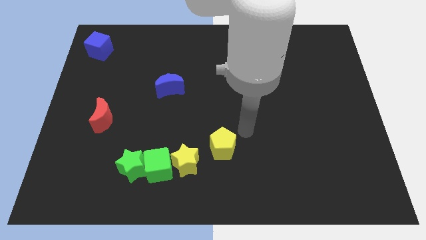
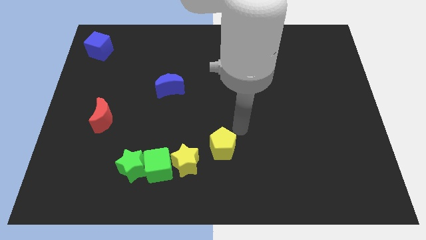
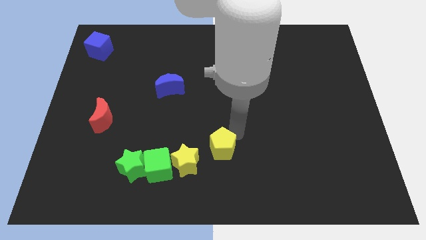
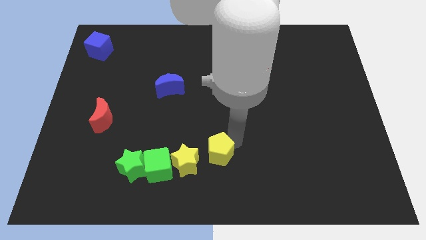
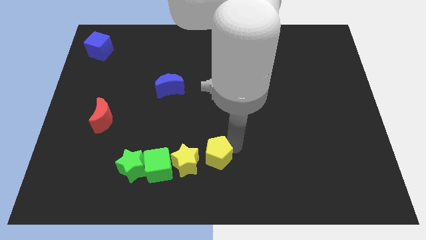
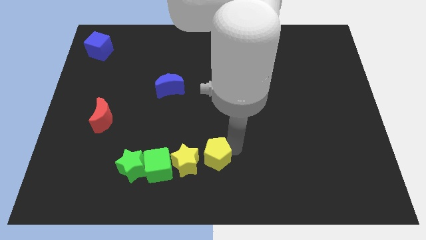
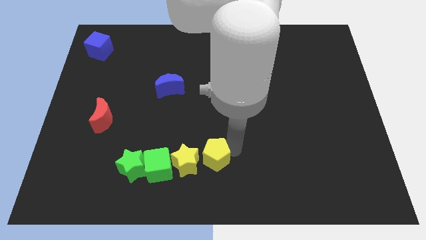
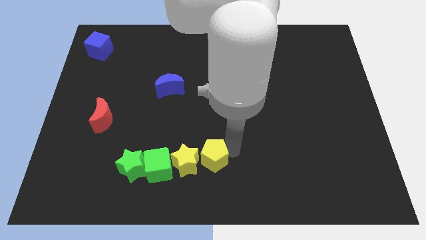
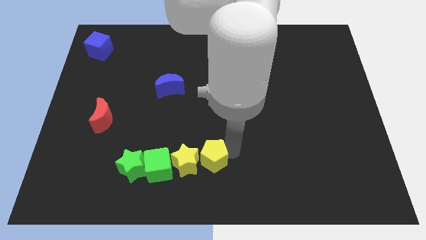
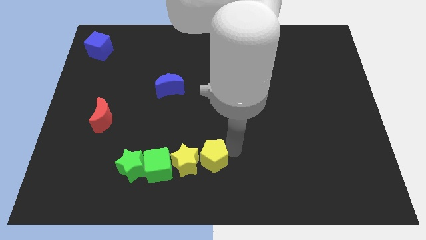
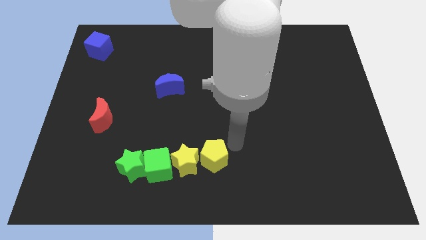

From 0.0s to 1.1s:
place pentagon to the top right of yellow star

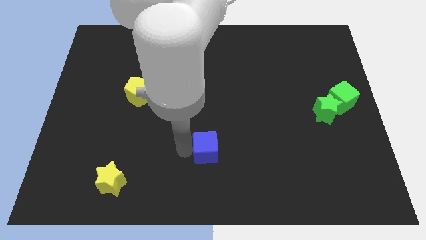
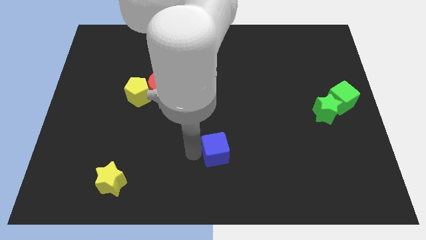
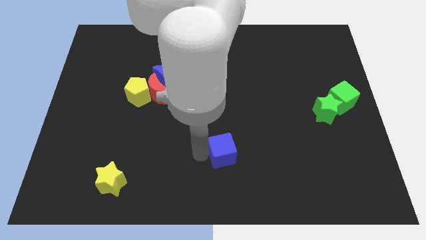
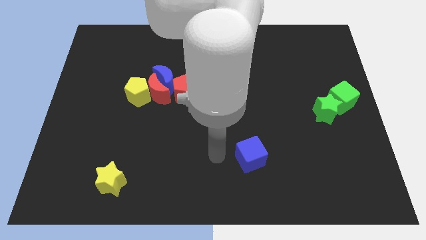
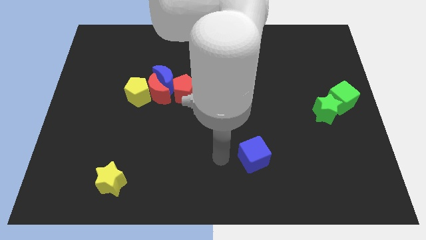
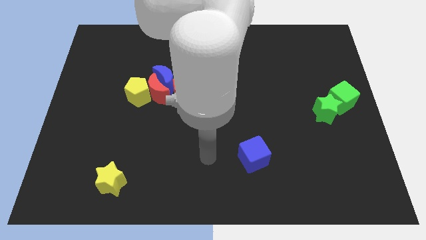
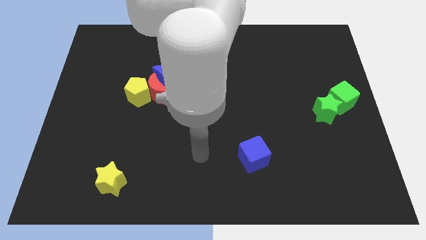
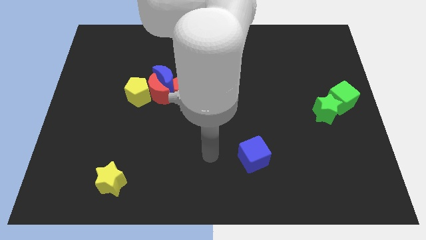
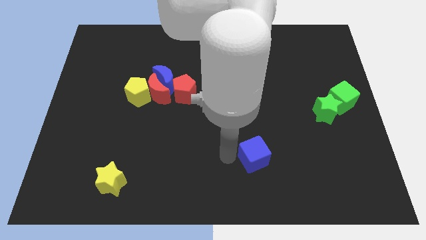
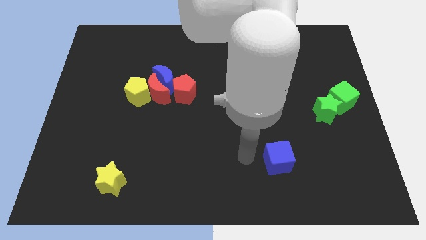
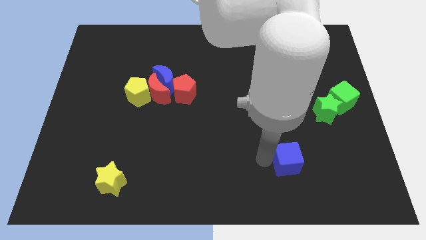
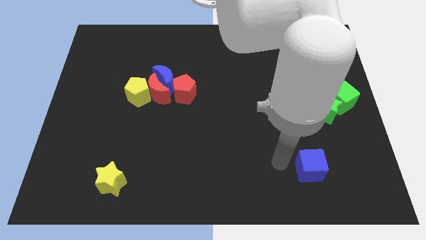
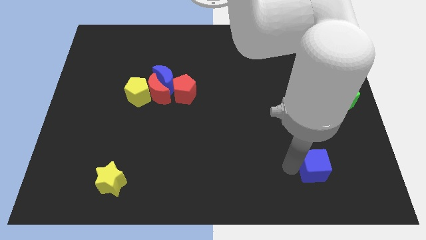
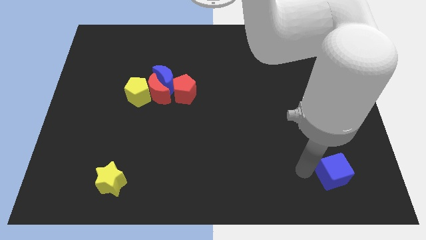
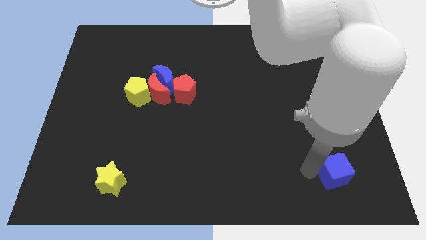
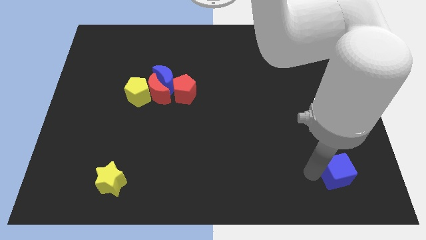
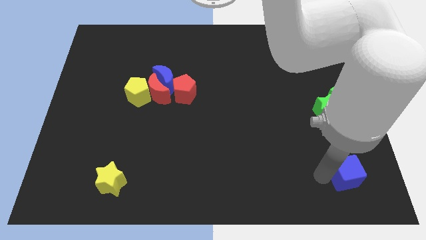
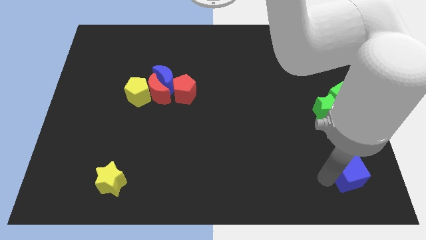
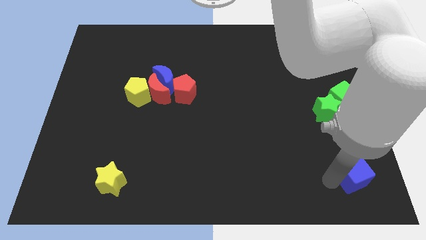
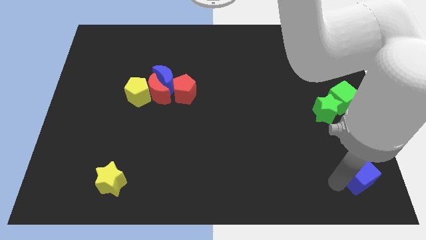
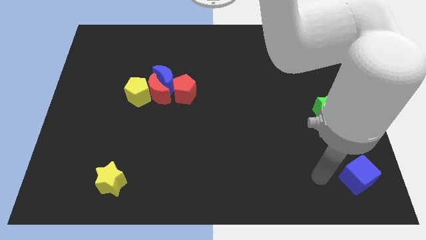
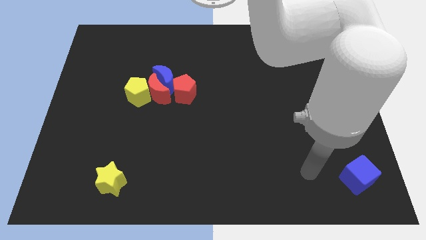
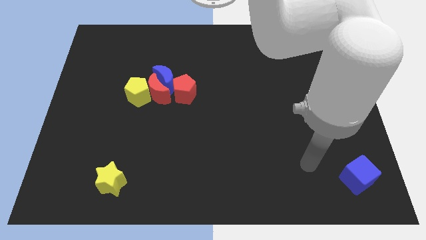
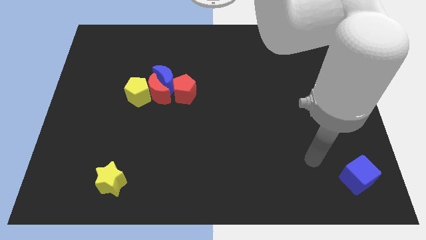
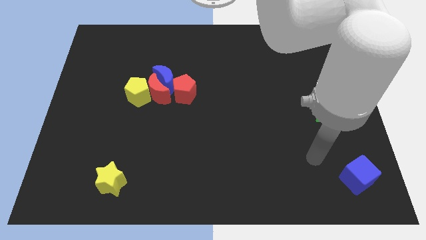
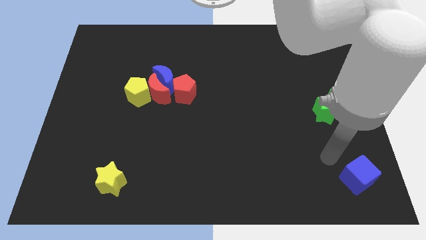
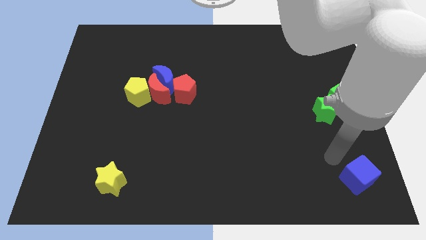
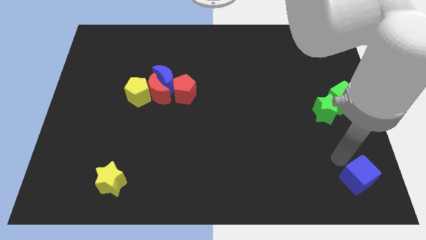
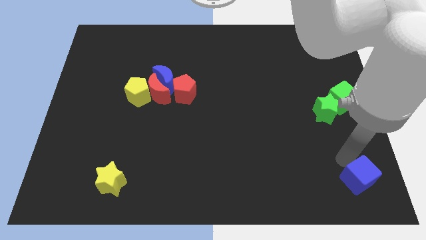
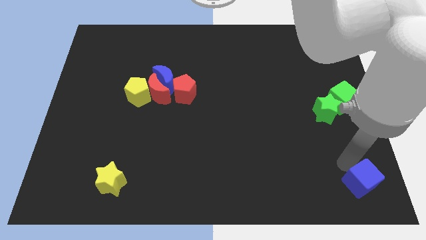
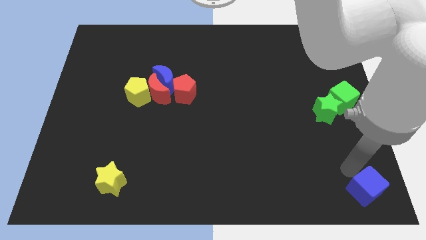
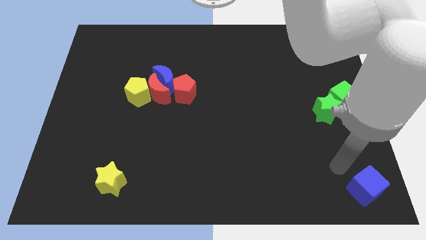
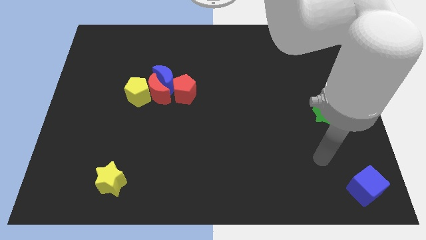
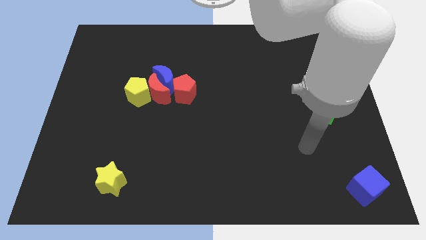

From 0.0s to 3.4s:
place the blue cube towards the right bottom corner of the board

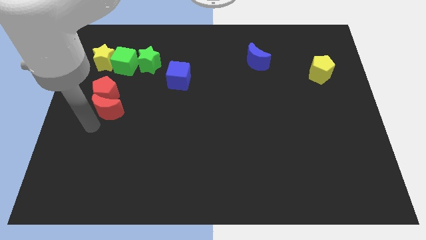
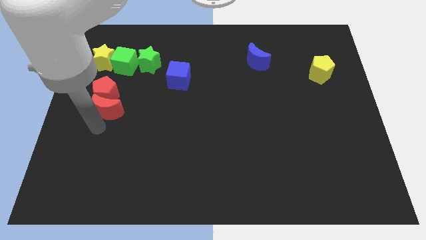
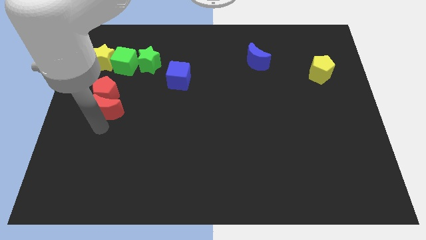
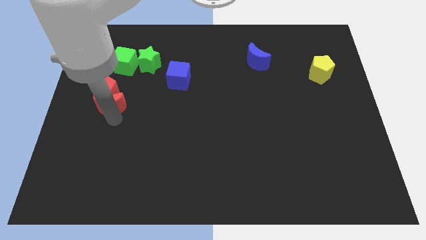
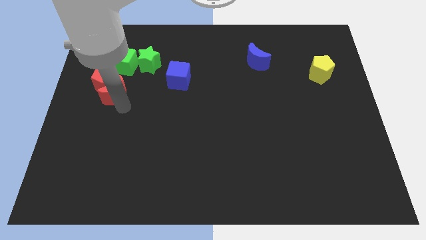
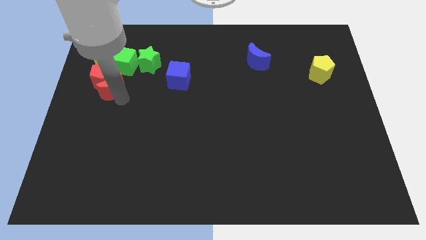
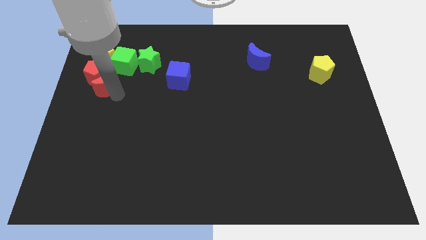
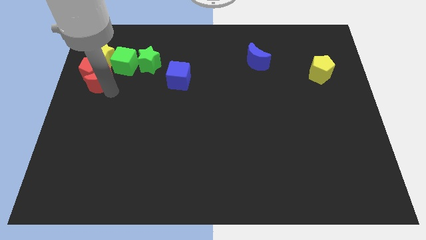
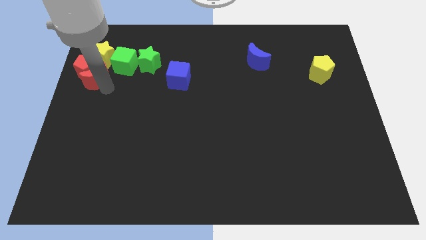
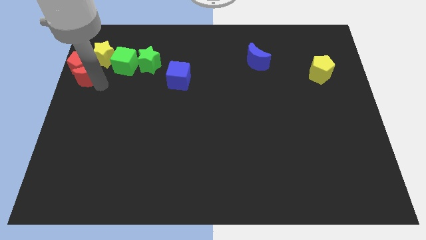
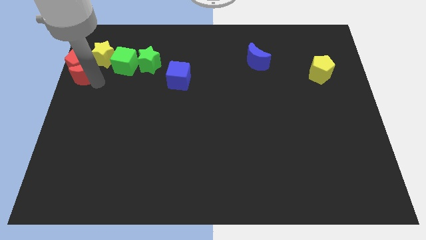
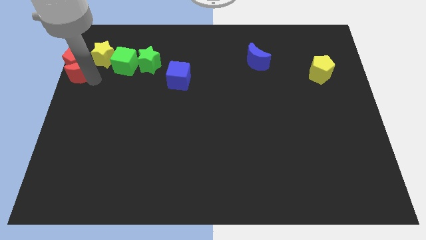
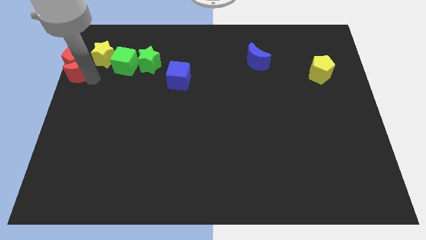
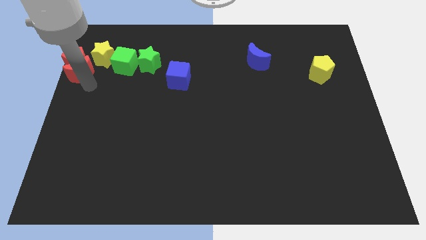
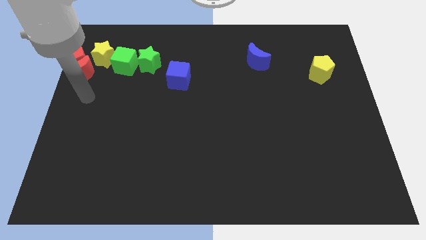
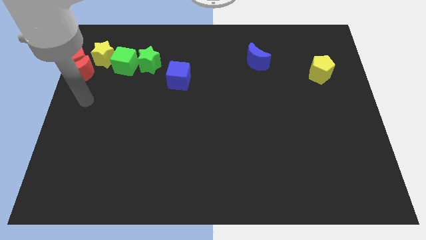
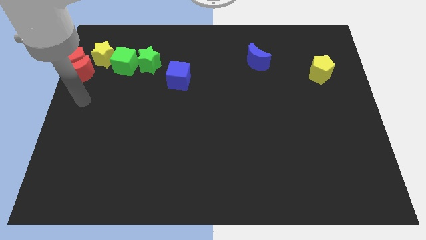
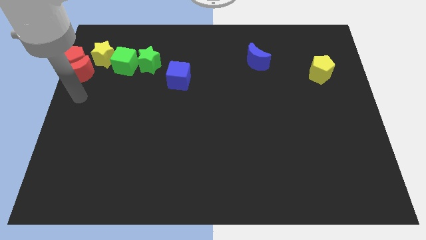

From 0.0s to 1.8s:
push the red pentagon with red moon to the left of the yellow star

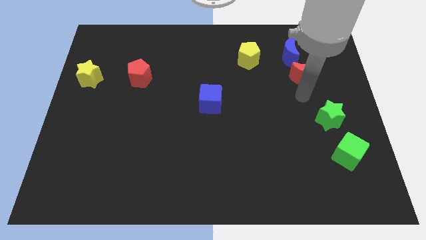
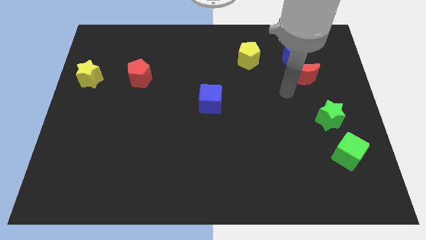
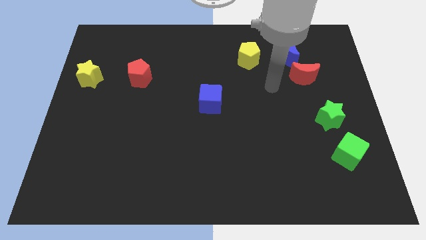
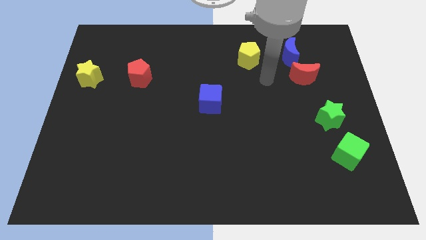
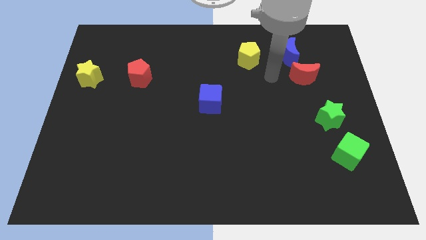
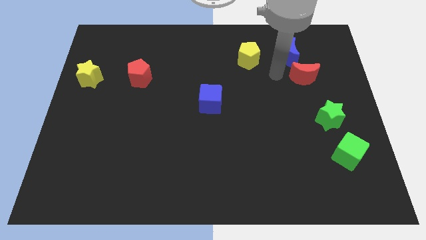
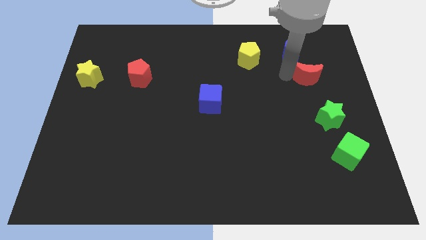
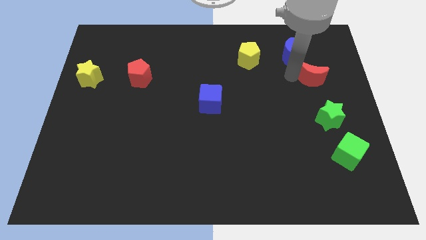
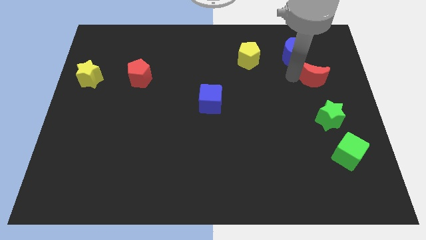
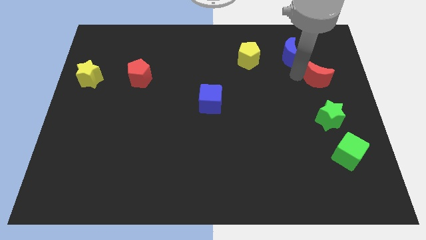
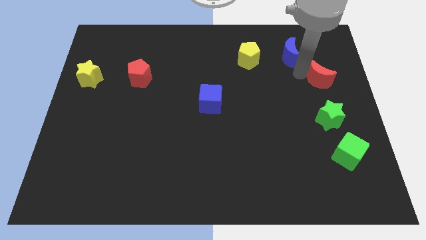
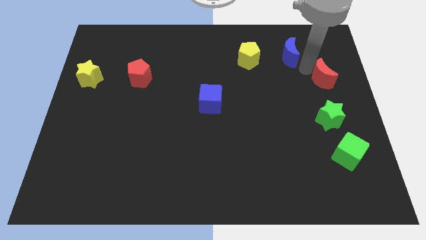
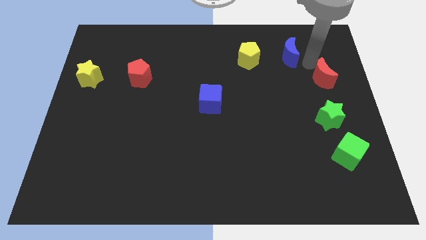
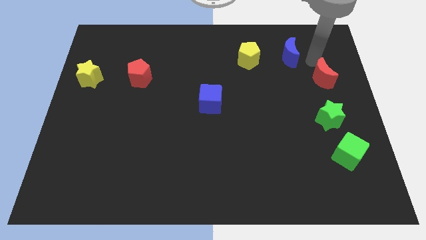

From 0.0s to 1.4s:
push the red crescent above the green star

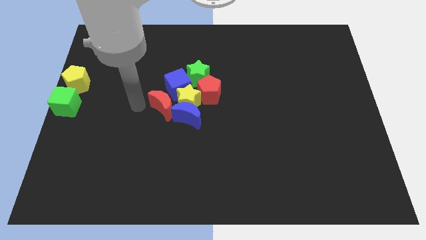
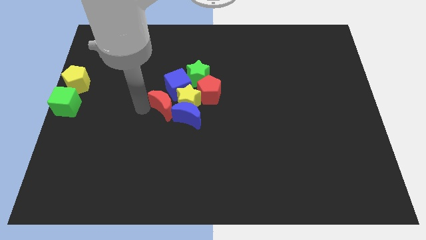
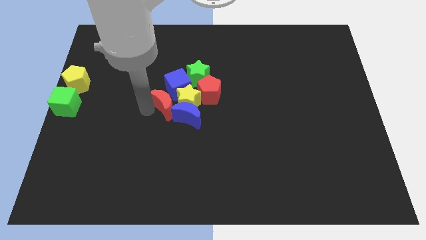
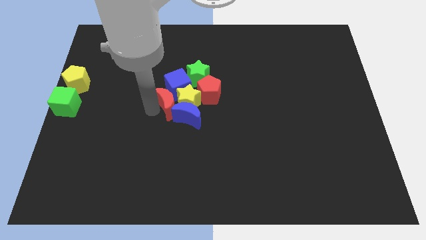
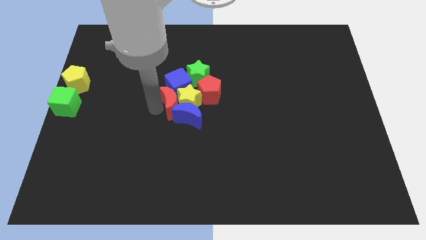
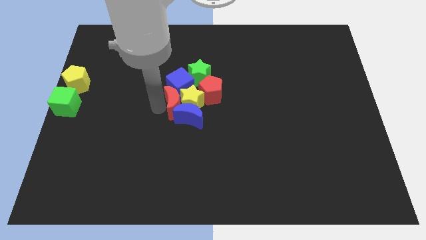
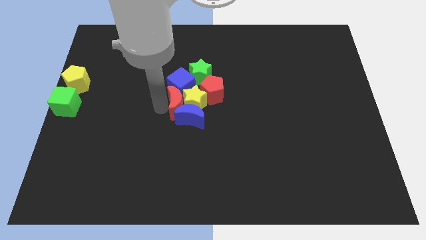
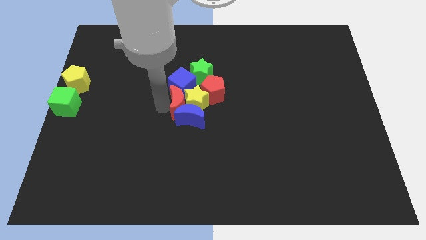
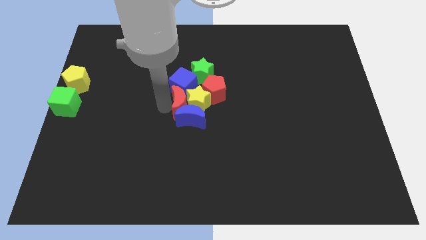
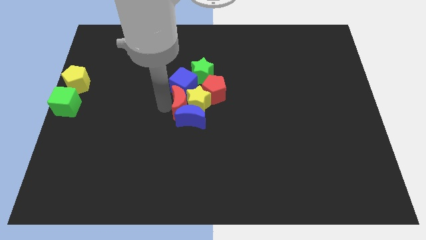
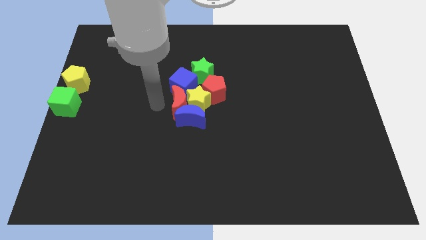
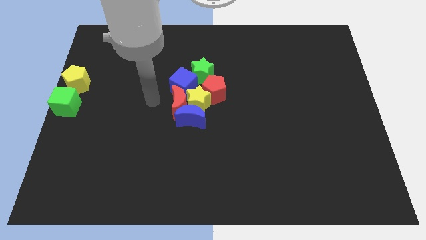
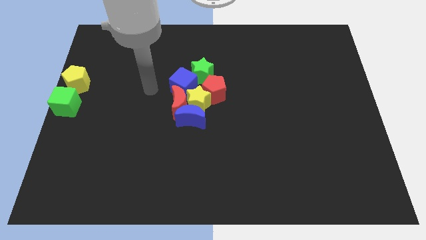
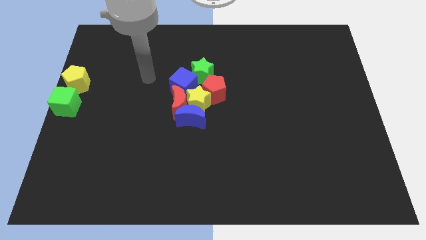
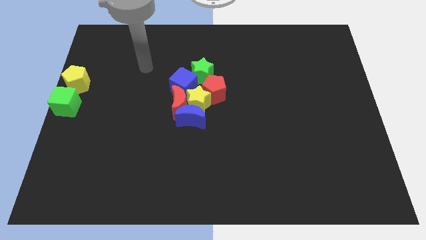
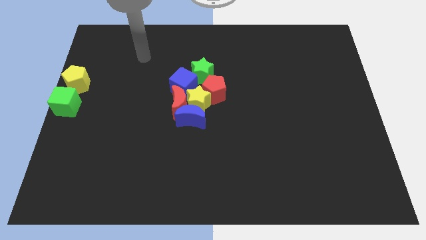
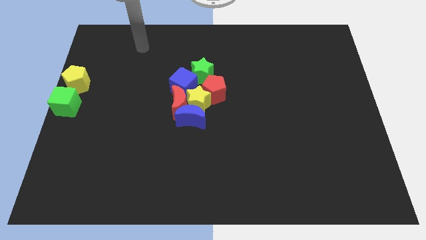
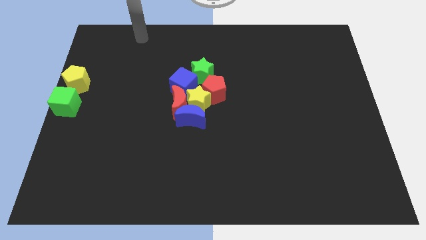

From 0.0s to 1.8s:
move red crescent into yellow star
